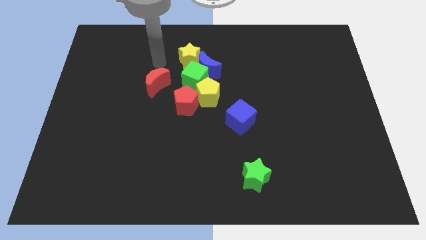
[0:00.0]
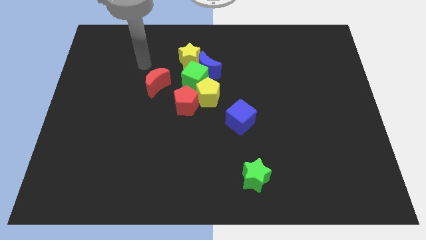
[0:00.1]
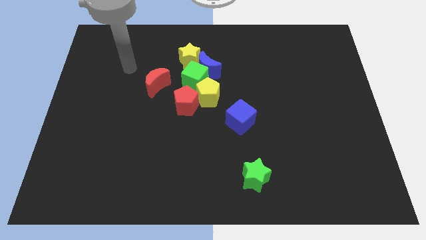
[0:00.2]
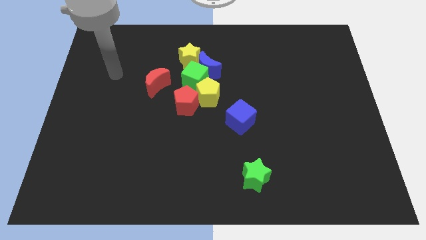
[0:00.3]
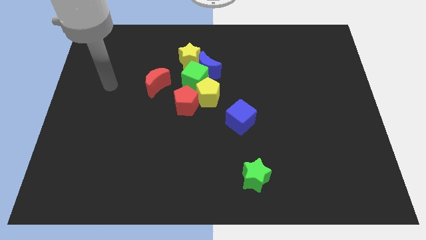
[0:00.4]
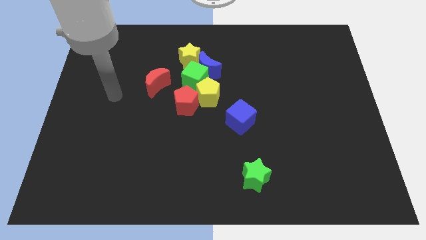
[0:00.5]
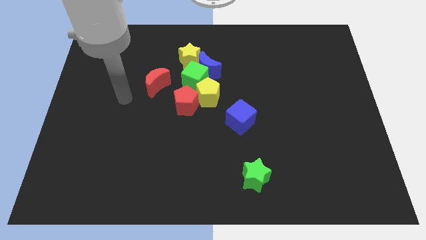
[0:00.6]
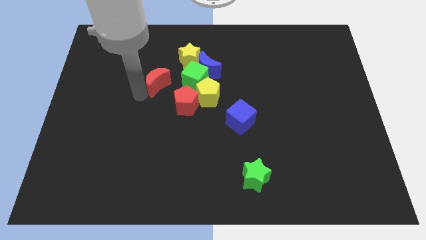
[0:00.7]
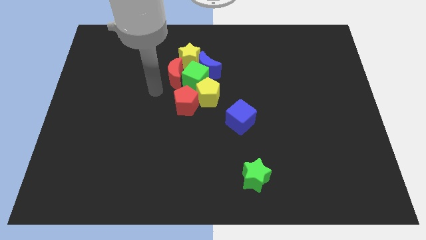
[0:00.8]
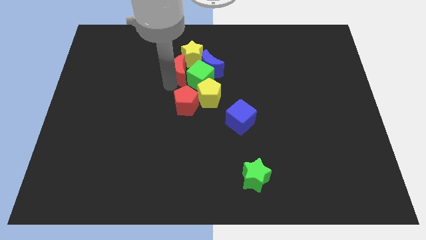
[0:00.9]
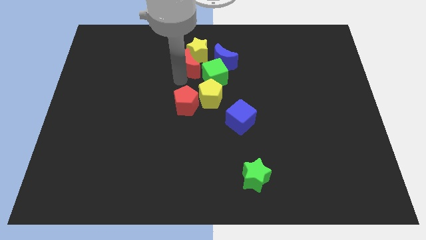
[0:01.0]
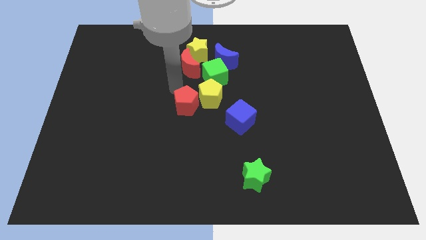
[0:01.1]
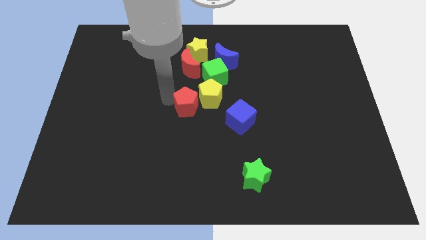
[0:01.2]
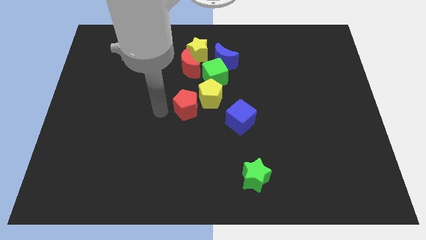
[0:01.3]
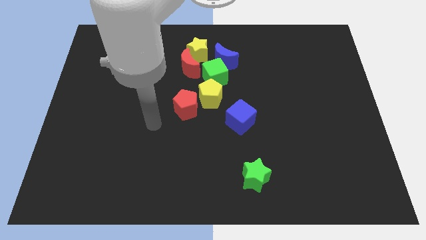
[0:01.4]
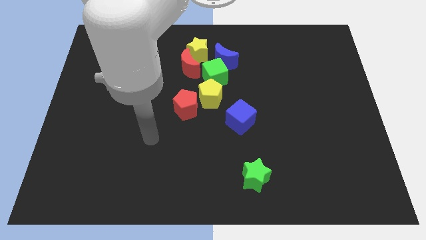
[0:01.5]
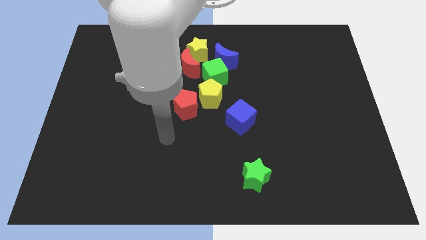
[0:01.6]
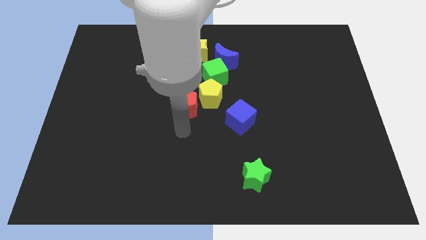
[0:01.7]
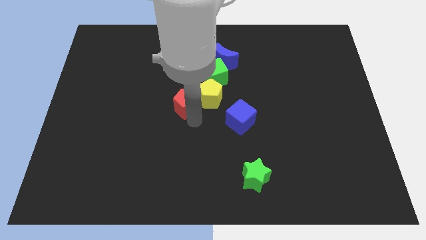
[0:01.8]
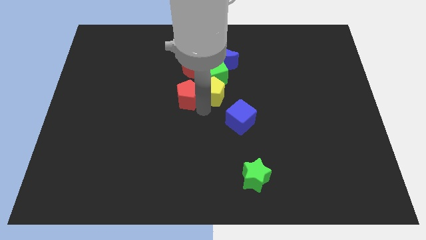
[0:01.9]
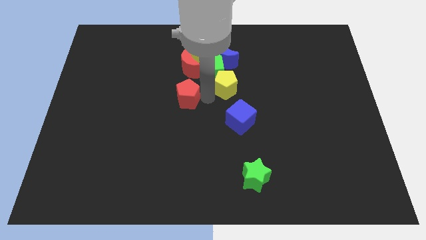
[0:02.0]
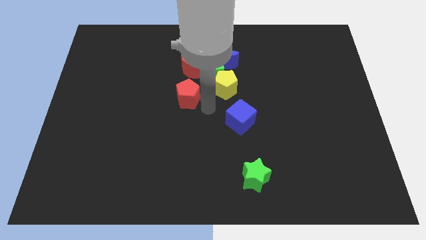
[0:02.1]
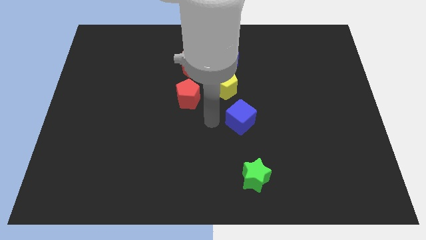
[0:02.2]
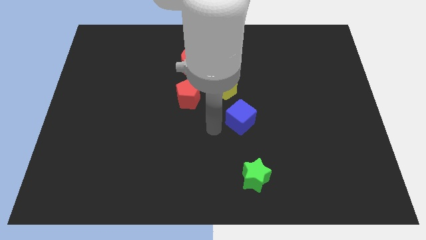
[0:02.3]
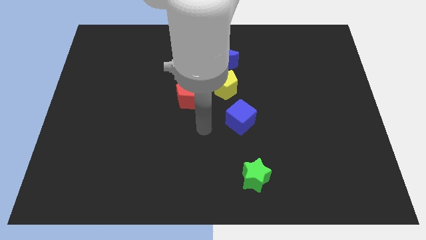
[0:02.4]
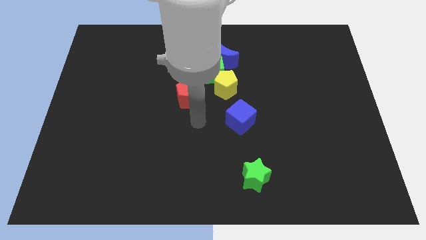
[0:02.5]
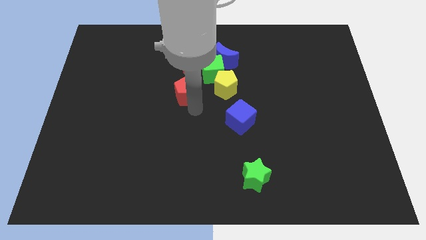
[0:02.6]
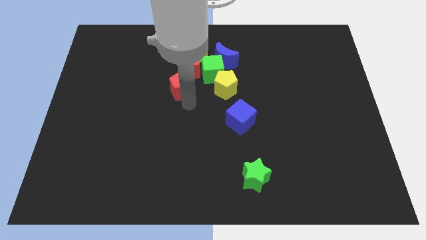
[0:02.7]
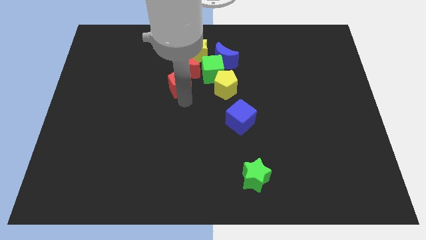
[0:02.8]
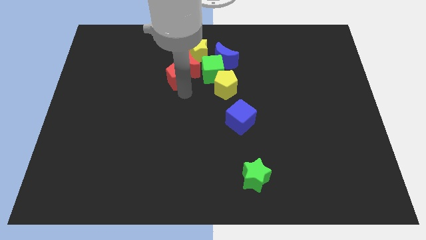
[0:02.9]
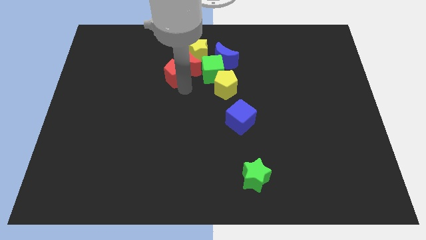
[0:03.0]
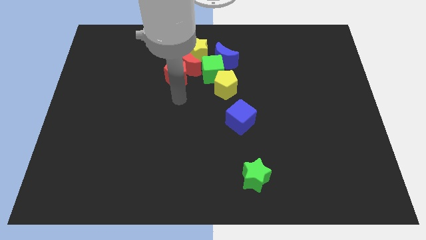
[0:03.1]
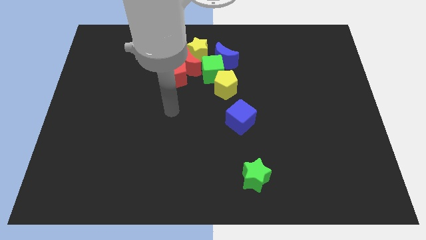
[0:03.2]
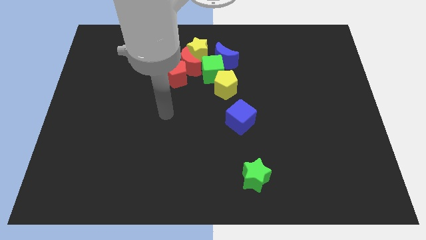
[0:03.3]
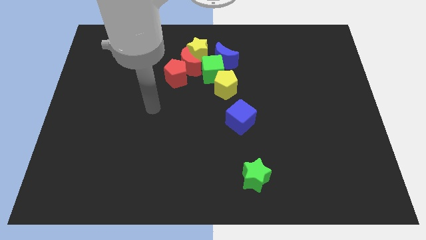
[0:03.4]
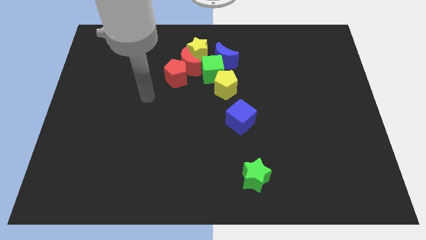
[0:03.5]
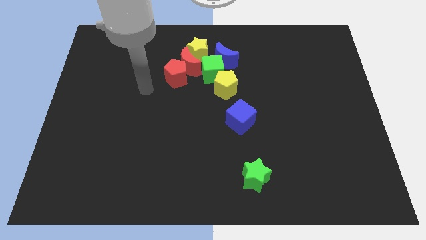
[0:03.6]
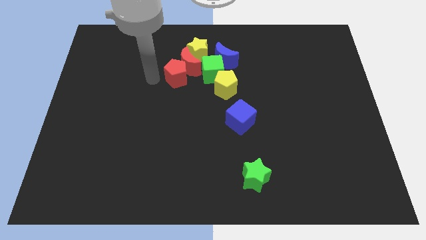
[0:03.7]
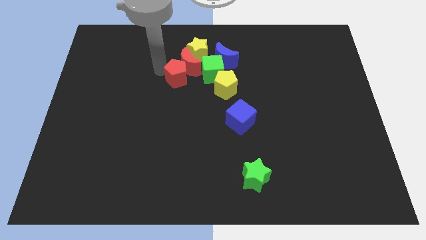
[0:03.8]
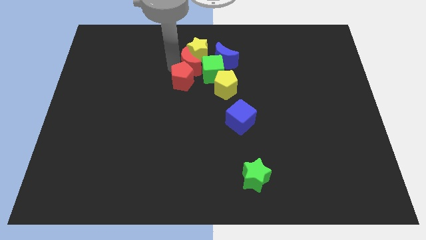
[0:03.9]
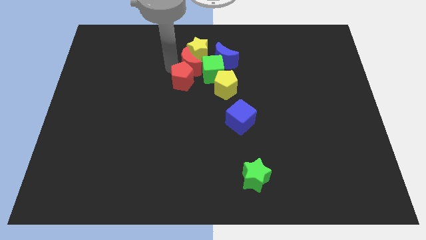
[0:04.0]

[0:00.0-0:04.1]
push the red crescent into the yellow star

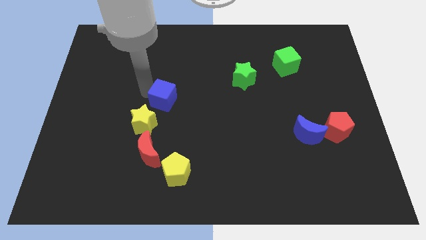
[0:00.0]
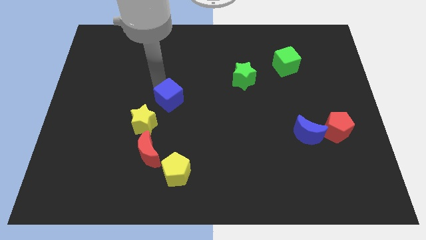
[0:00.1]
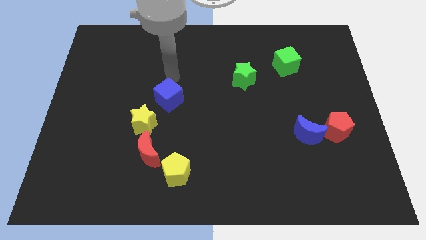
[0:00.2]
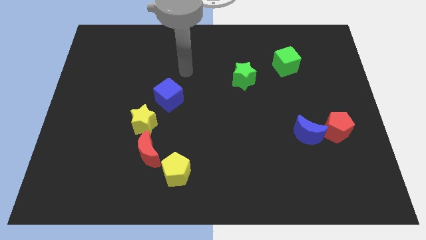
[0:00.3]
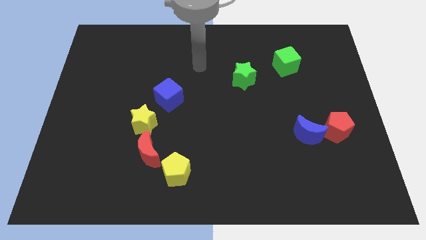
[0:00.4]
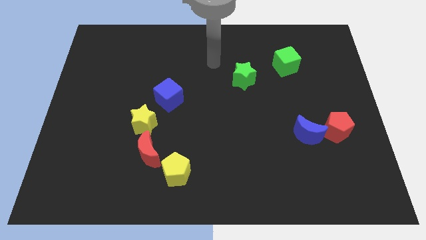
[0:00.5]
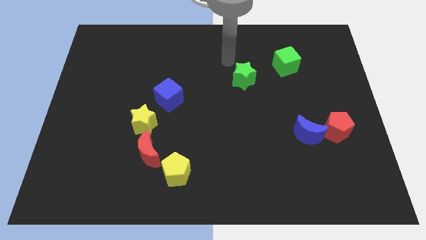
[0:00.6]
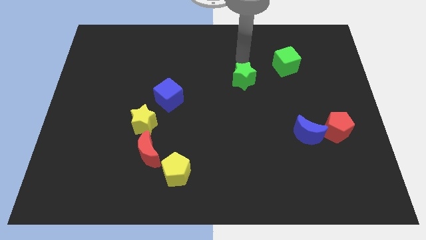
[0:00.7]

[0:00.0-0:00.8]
move the arm towards the green star

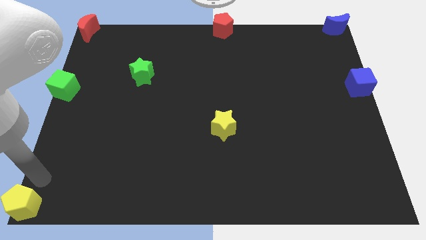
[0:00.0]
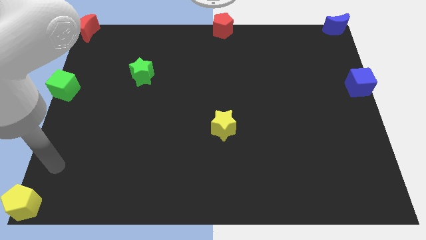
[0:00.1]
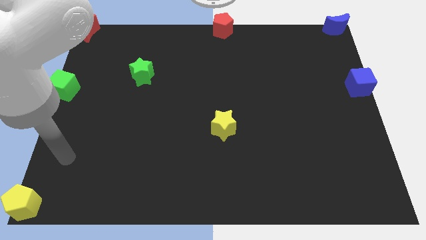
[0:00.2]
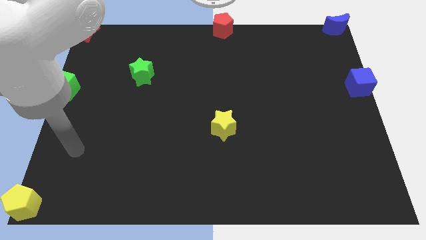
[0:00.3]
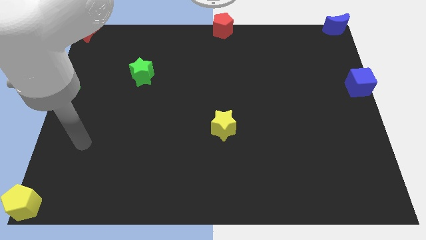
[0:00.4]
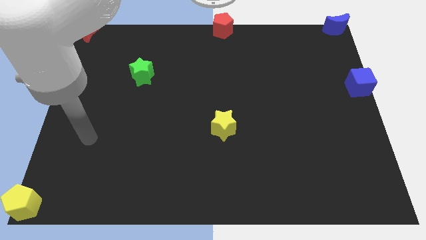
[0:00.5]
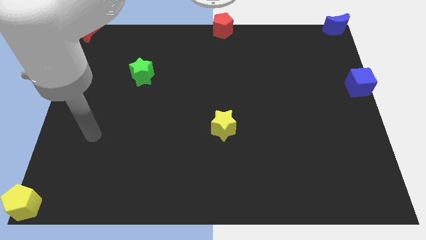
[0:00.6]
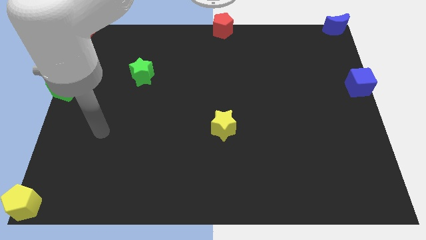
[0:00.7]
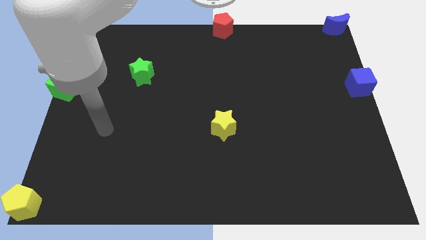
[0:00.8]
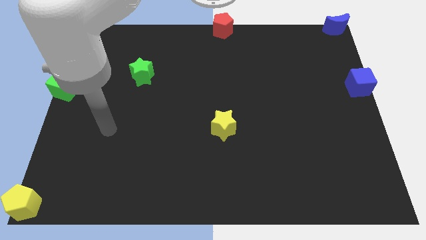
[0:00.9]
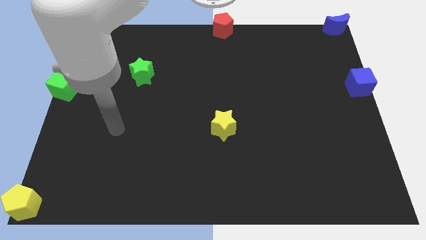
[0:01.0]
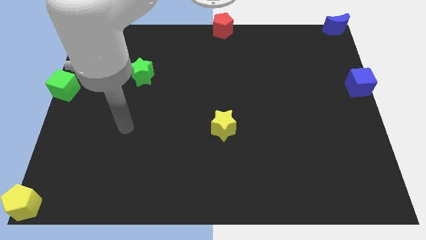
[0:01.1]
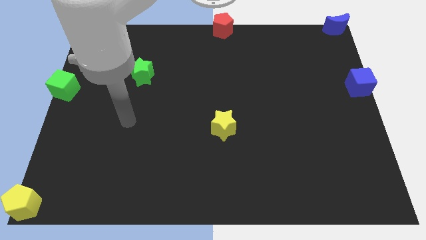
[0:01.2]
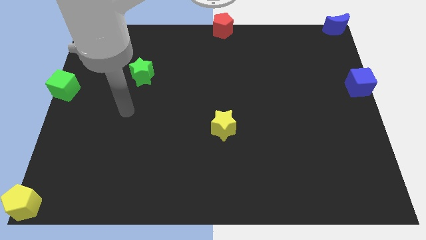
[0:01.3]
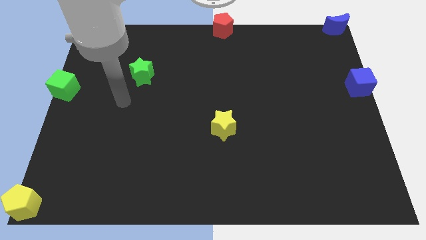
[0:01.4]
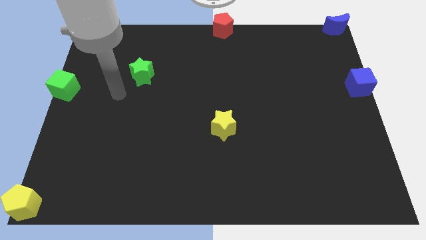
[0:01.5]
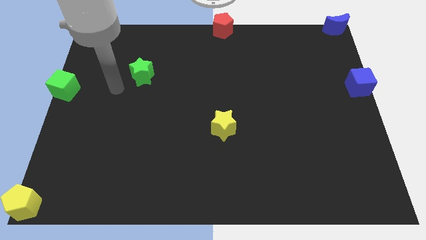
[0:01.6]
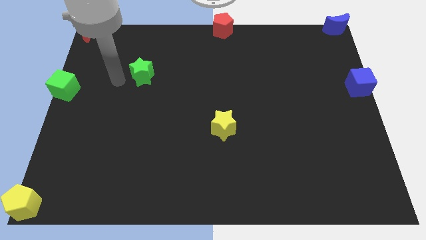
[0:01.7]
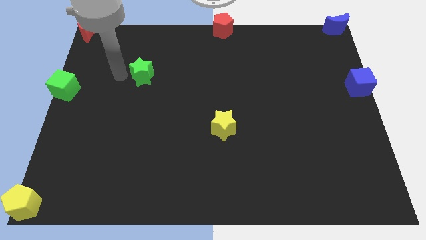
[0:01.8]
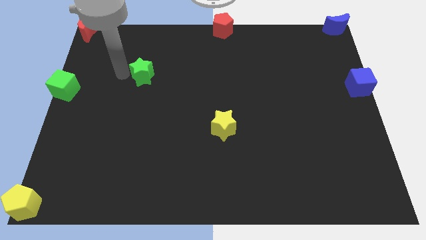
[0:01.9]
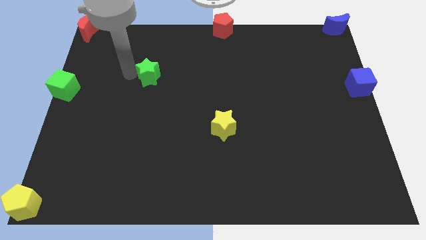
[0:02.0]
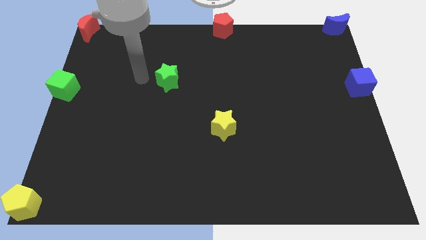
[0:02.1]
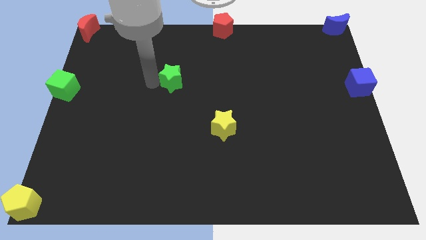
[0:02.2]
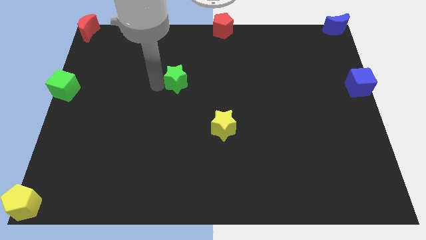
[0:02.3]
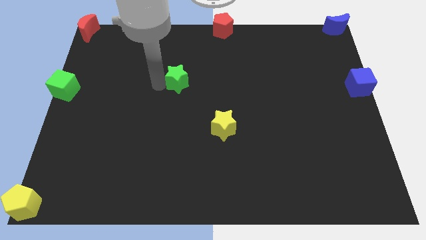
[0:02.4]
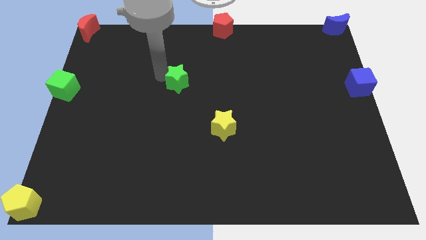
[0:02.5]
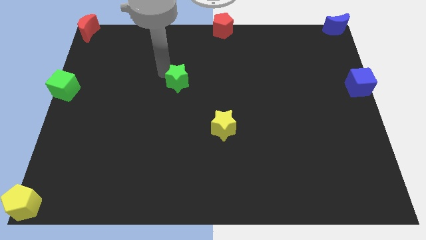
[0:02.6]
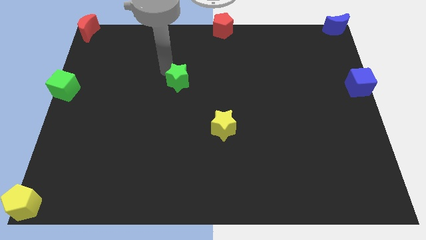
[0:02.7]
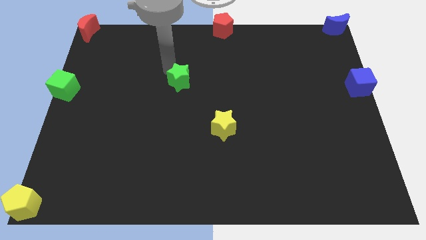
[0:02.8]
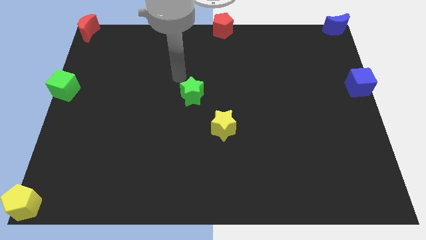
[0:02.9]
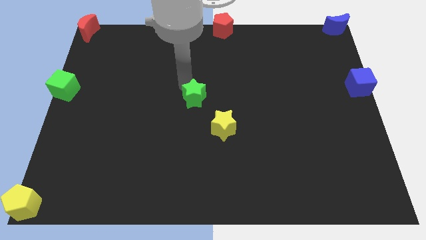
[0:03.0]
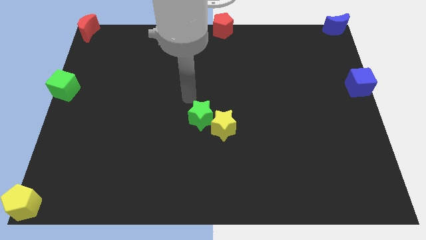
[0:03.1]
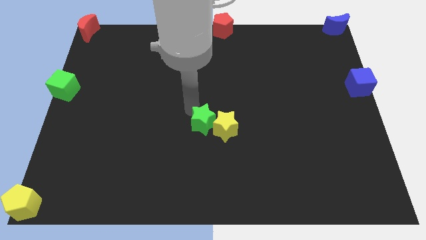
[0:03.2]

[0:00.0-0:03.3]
push the green star into the yellow star

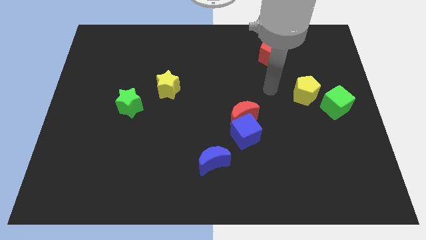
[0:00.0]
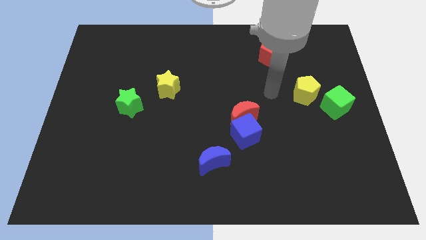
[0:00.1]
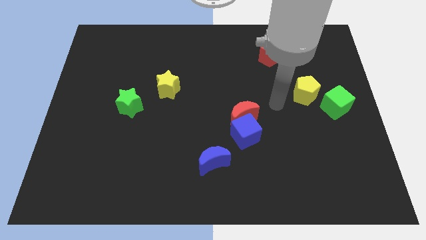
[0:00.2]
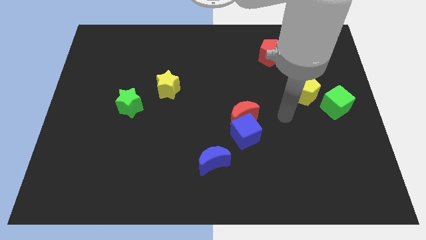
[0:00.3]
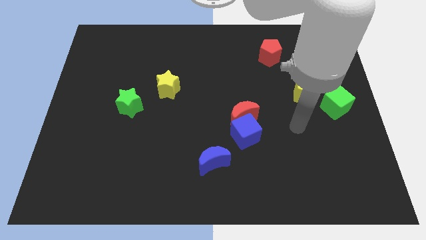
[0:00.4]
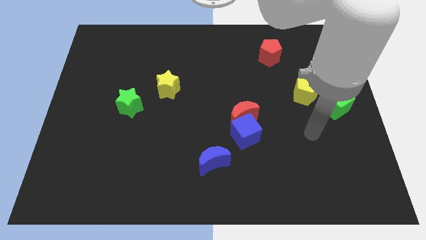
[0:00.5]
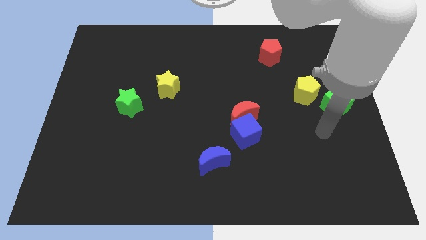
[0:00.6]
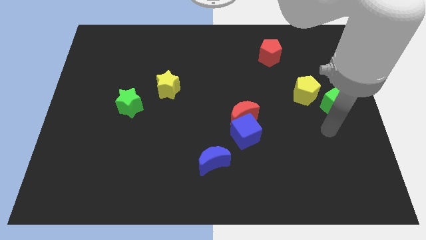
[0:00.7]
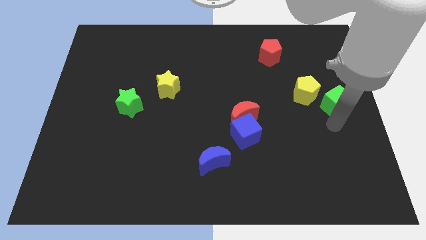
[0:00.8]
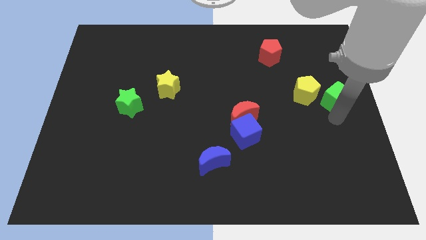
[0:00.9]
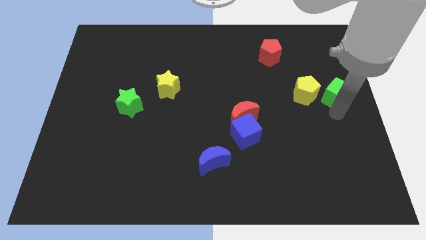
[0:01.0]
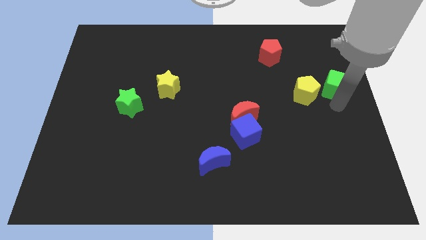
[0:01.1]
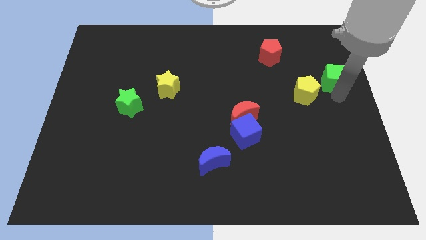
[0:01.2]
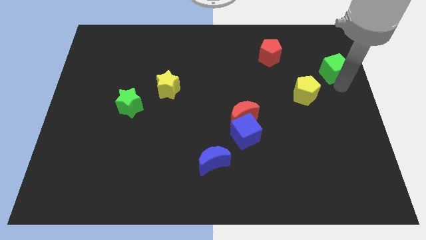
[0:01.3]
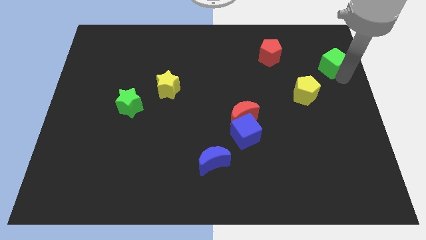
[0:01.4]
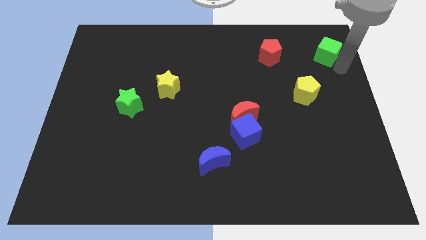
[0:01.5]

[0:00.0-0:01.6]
move the green cube parallel right to the red pentagon
